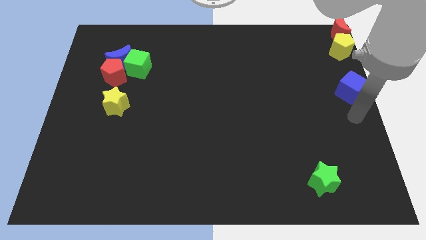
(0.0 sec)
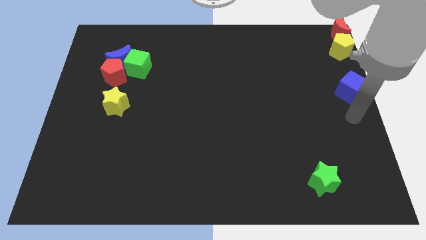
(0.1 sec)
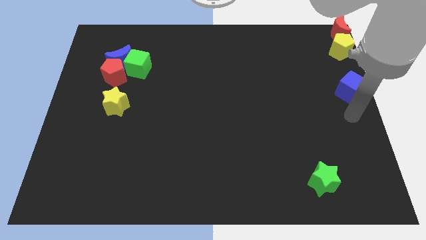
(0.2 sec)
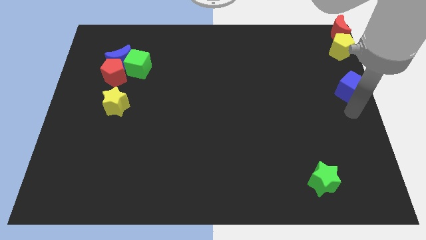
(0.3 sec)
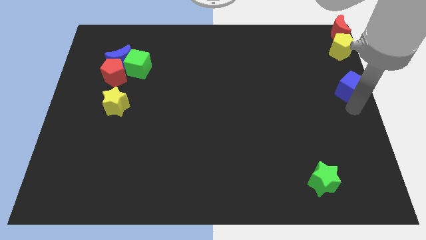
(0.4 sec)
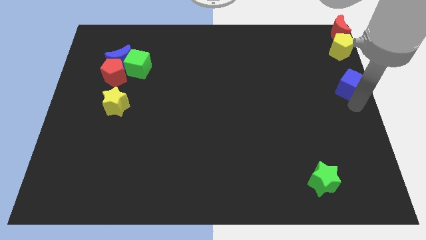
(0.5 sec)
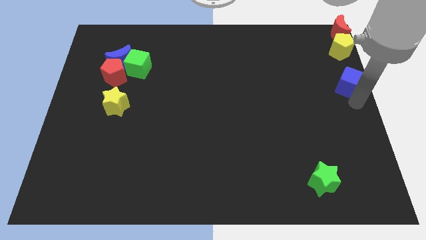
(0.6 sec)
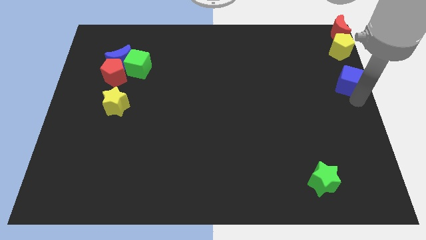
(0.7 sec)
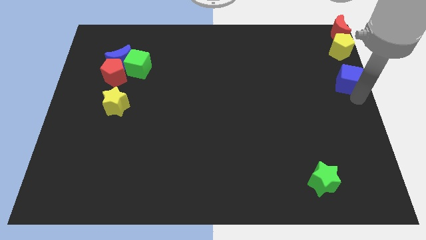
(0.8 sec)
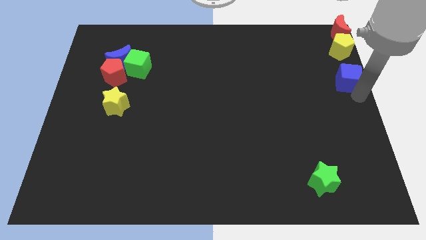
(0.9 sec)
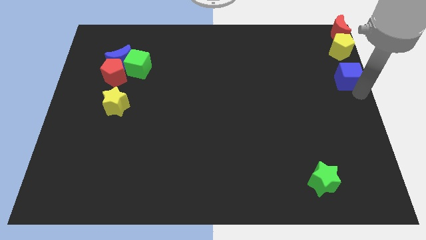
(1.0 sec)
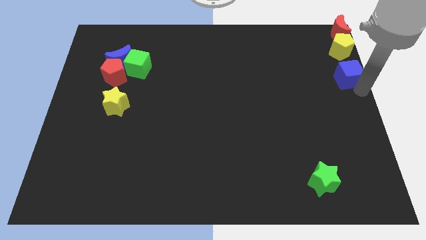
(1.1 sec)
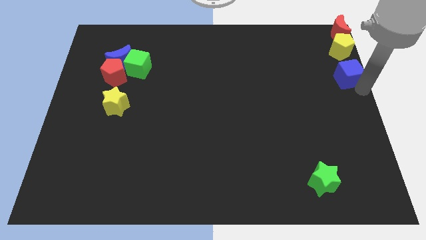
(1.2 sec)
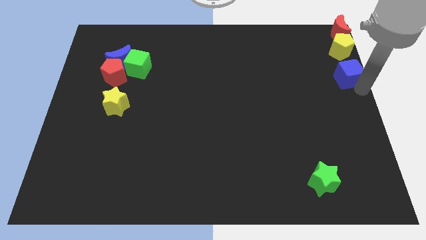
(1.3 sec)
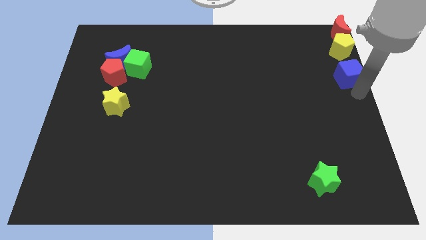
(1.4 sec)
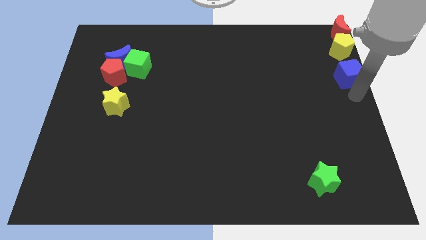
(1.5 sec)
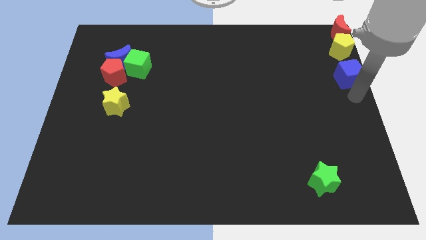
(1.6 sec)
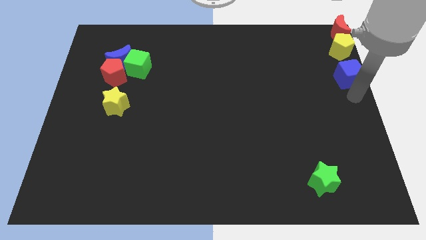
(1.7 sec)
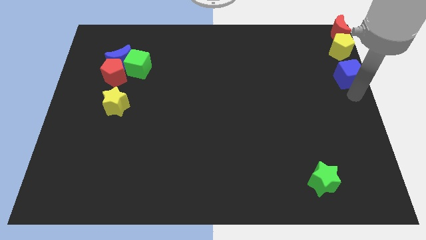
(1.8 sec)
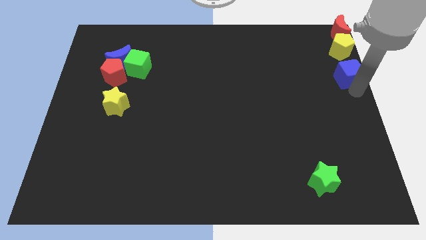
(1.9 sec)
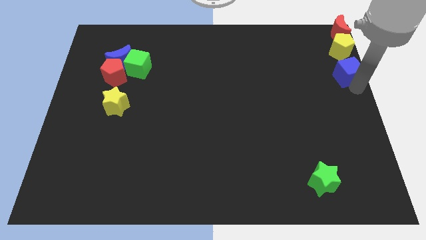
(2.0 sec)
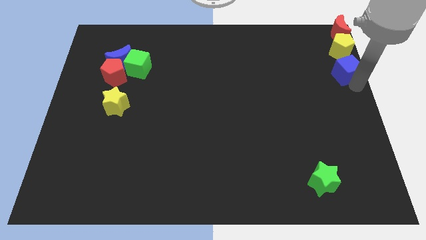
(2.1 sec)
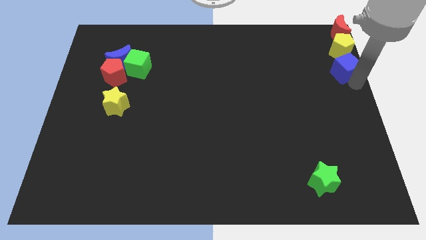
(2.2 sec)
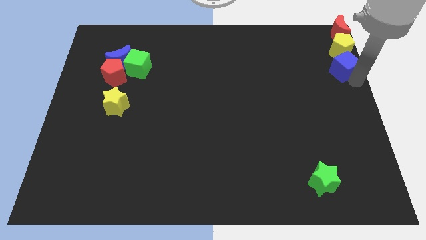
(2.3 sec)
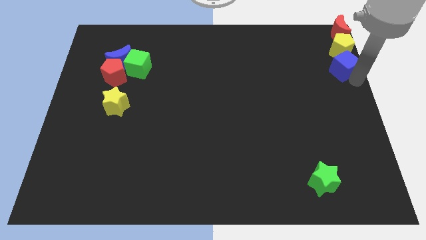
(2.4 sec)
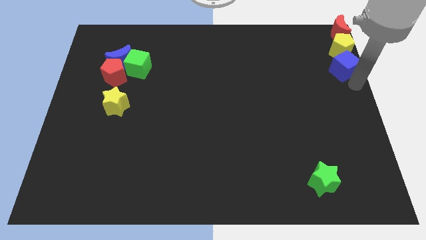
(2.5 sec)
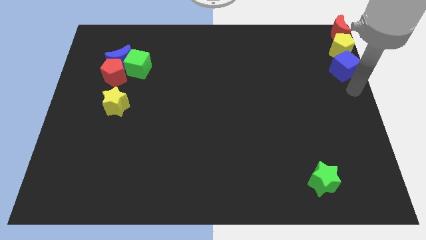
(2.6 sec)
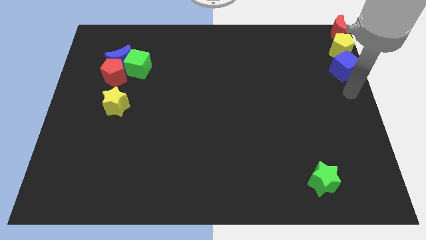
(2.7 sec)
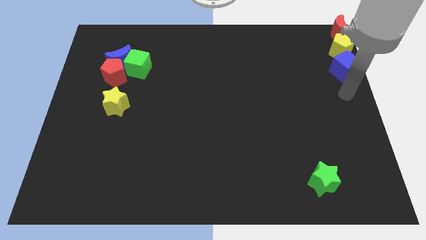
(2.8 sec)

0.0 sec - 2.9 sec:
move the blue cube to the bottom side of the yellow pentagon

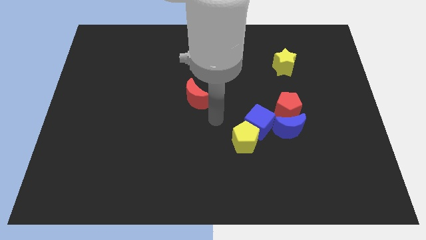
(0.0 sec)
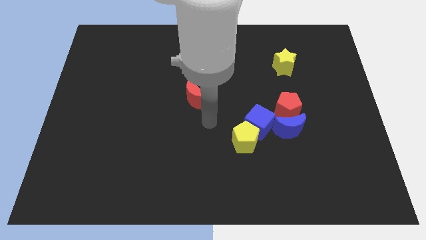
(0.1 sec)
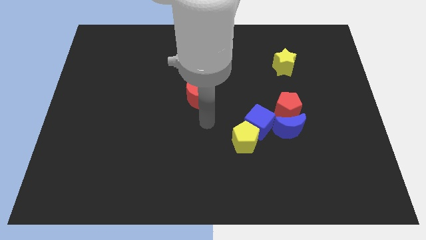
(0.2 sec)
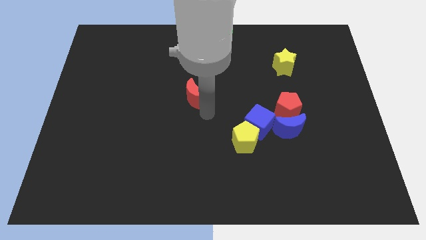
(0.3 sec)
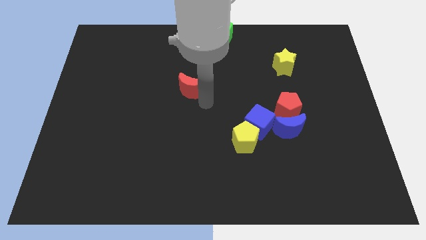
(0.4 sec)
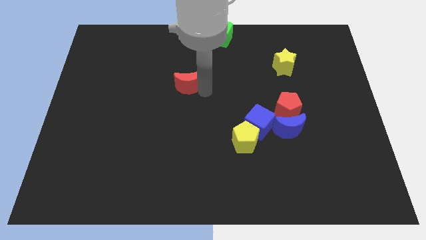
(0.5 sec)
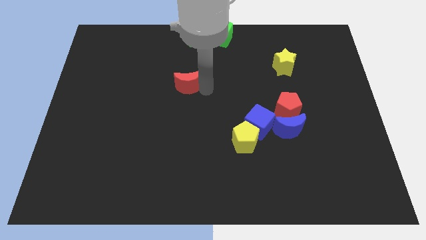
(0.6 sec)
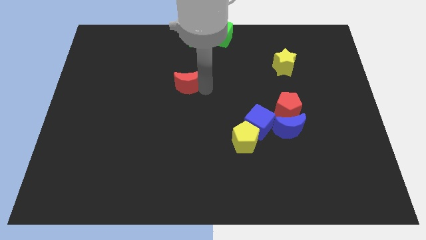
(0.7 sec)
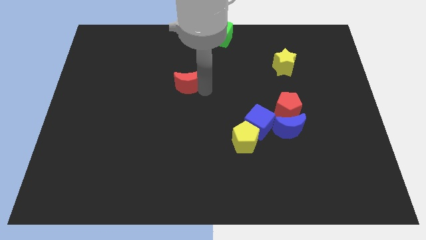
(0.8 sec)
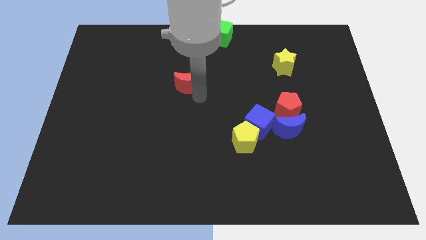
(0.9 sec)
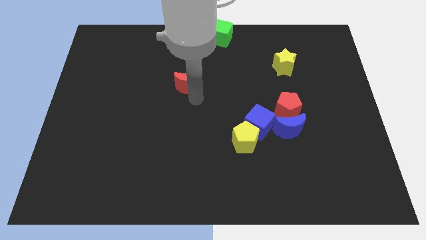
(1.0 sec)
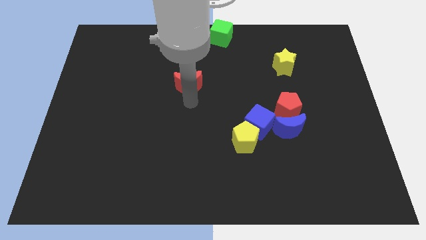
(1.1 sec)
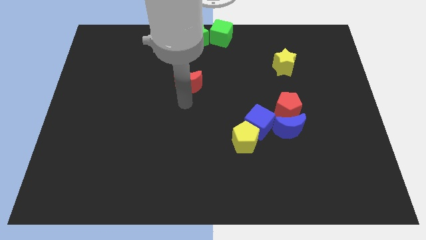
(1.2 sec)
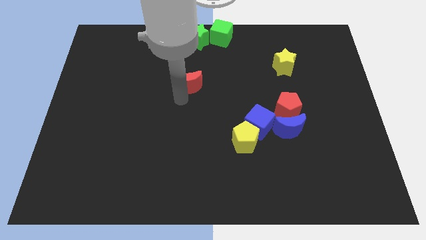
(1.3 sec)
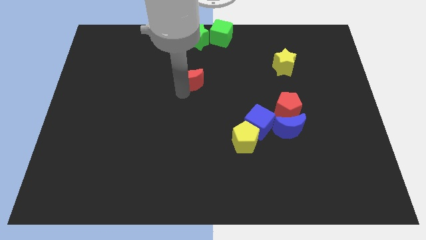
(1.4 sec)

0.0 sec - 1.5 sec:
move the red crescent to the top center

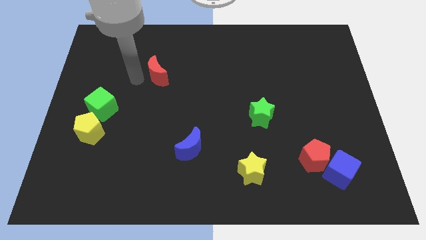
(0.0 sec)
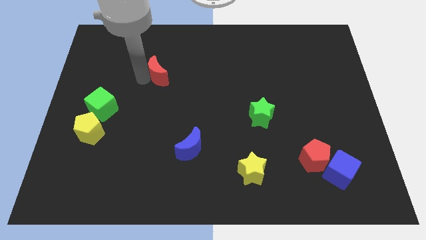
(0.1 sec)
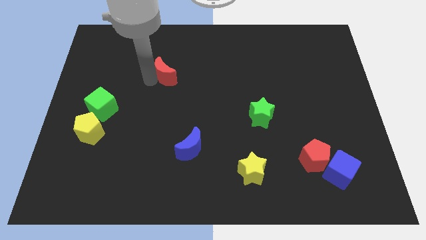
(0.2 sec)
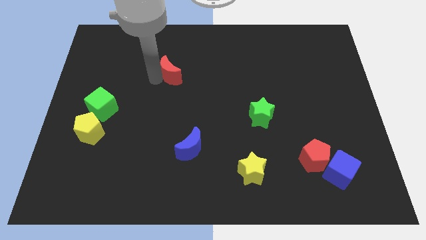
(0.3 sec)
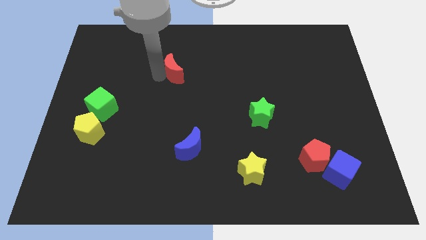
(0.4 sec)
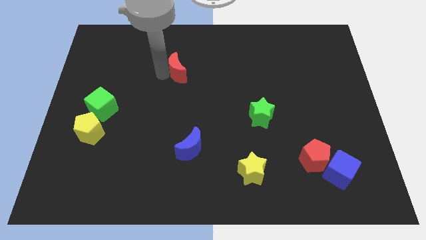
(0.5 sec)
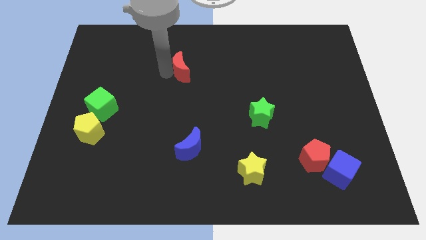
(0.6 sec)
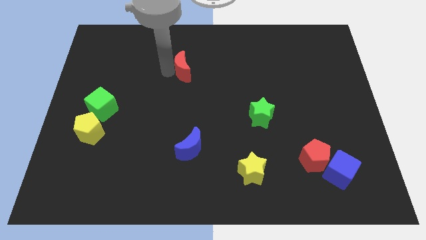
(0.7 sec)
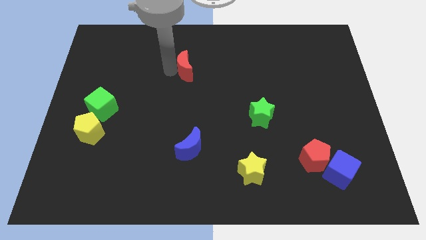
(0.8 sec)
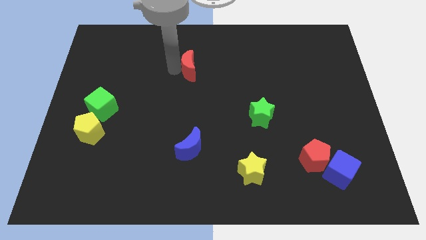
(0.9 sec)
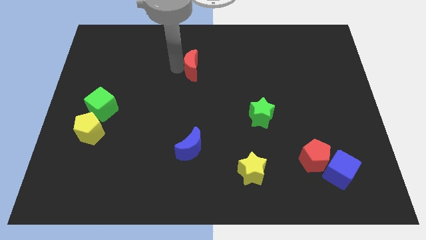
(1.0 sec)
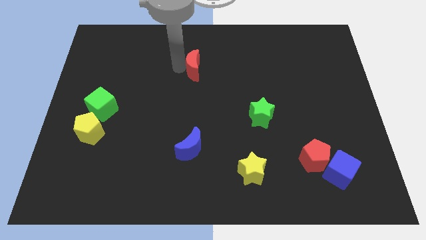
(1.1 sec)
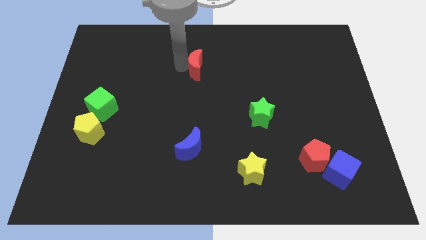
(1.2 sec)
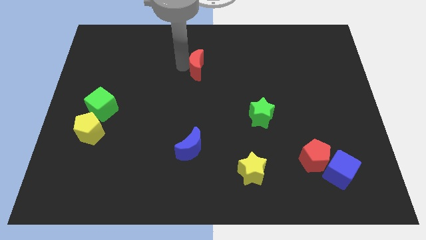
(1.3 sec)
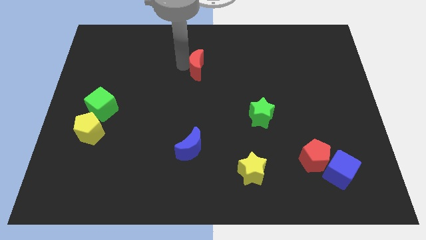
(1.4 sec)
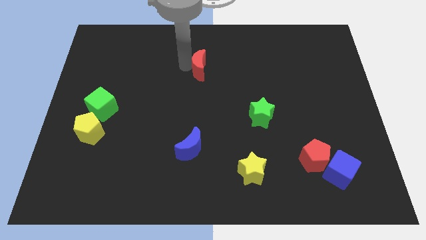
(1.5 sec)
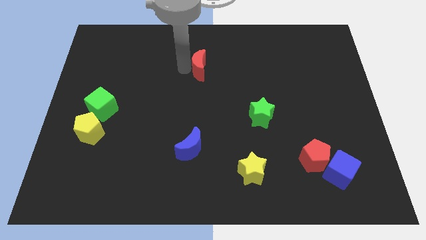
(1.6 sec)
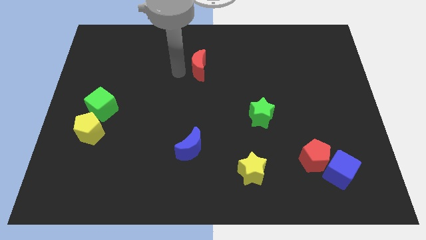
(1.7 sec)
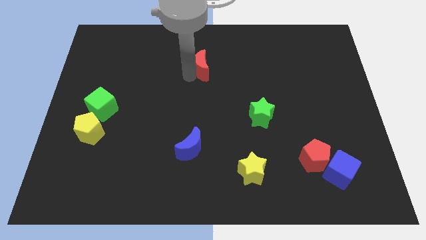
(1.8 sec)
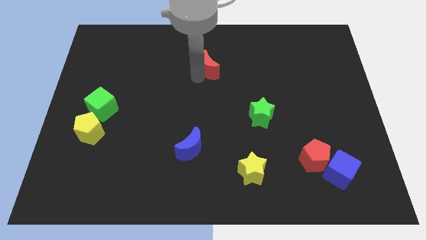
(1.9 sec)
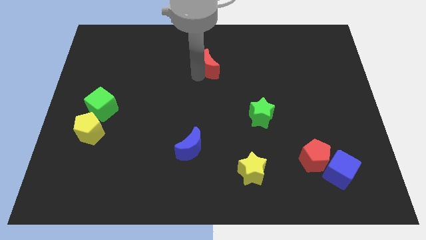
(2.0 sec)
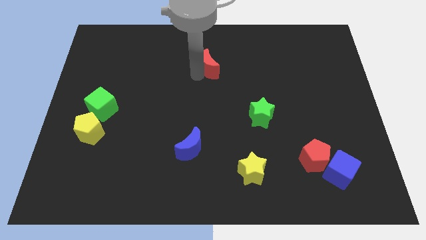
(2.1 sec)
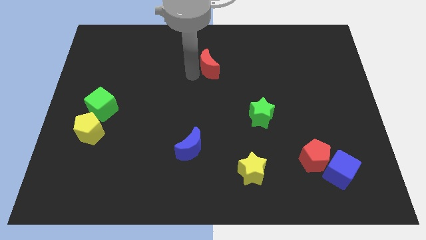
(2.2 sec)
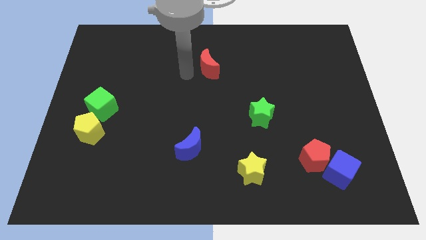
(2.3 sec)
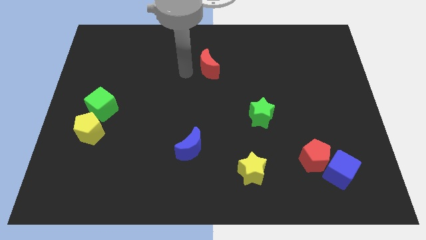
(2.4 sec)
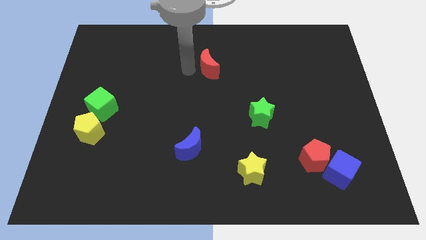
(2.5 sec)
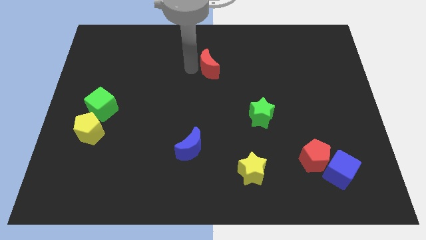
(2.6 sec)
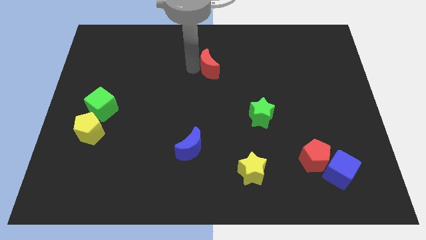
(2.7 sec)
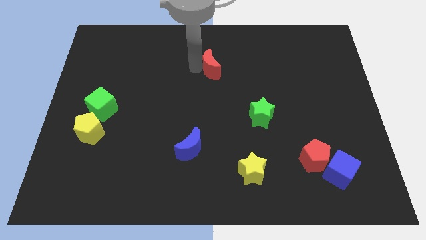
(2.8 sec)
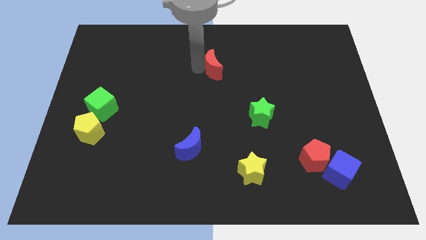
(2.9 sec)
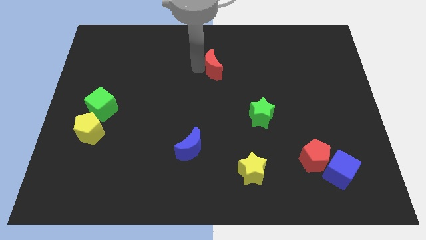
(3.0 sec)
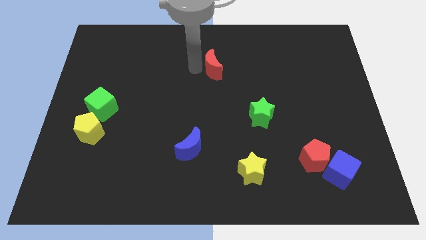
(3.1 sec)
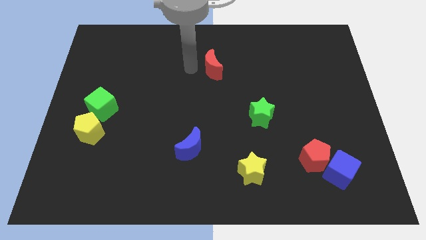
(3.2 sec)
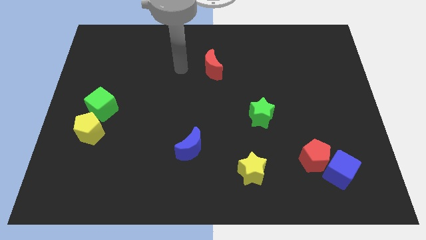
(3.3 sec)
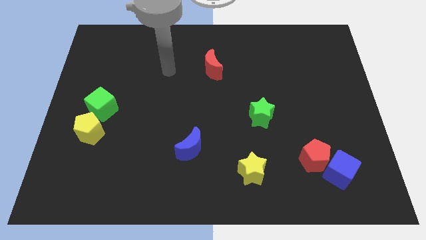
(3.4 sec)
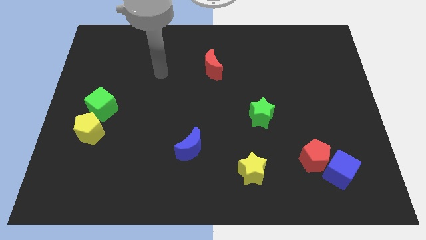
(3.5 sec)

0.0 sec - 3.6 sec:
push the red crescent slightly to the right

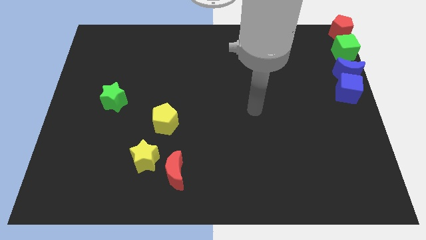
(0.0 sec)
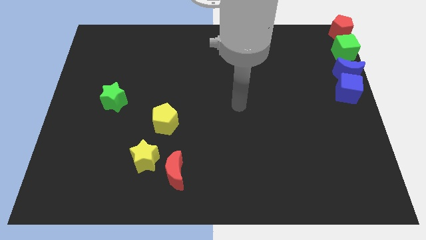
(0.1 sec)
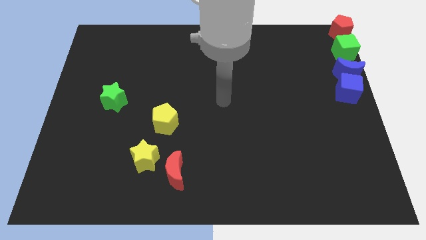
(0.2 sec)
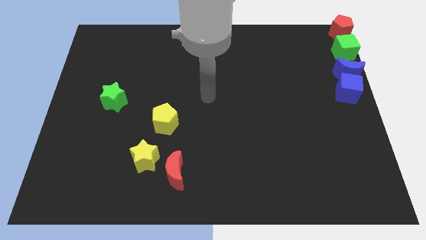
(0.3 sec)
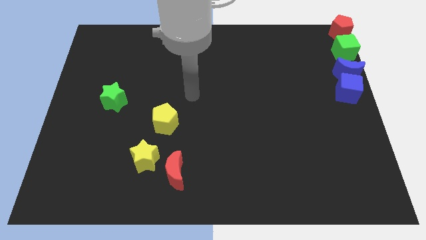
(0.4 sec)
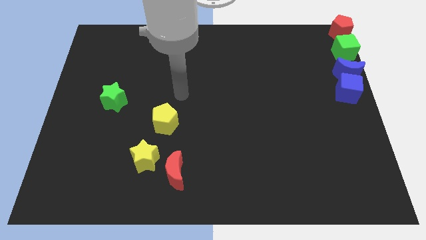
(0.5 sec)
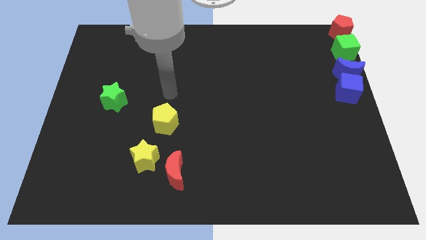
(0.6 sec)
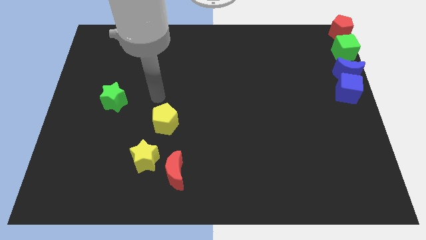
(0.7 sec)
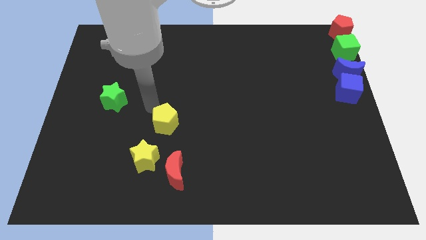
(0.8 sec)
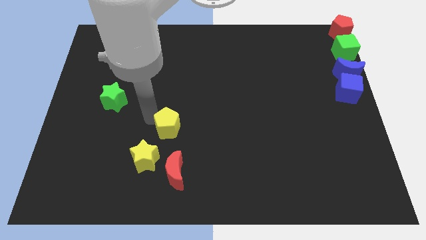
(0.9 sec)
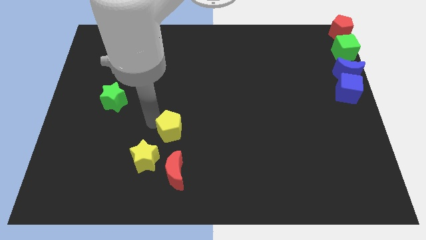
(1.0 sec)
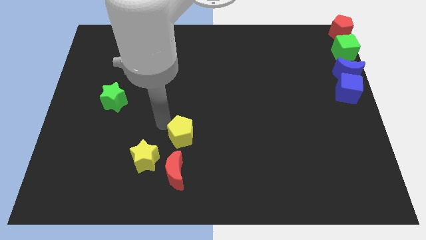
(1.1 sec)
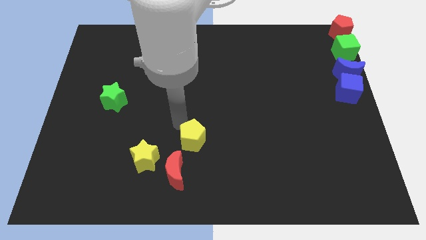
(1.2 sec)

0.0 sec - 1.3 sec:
put the yellow pentagon to the top side of the red crescent
